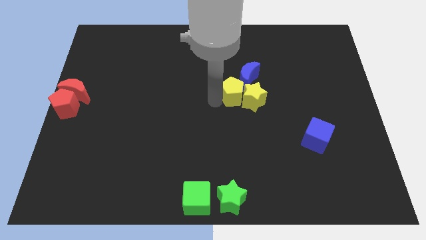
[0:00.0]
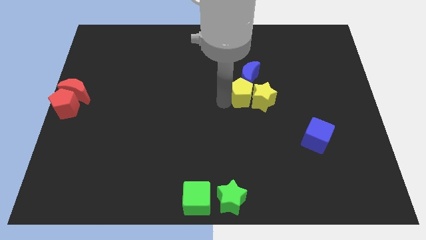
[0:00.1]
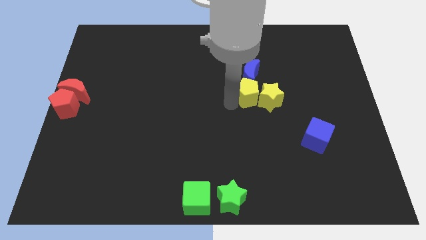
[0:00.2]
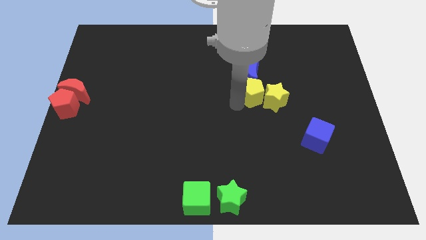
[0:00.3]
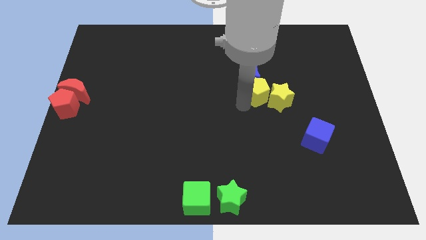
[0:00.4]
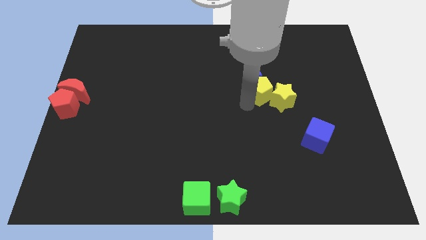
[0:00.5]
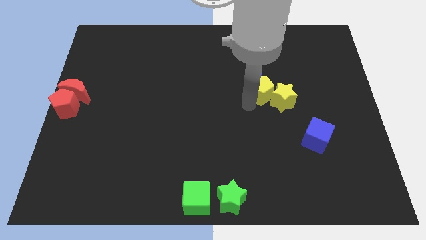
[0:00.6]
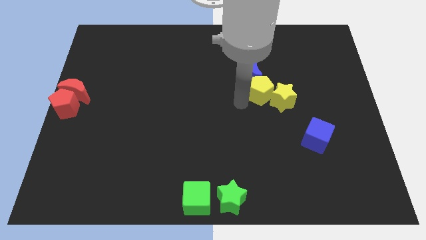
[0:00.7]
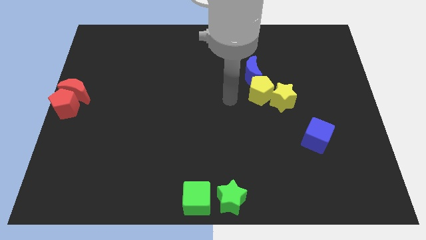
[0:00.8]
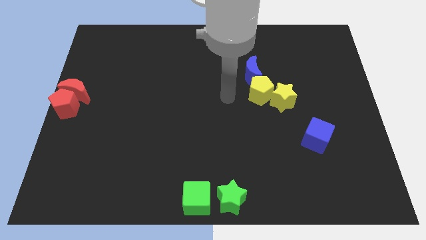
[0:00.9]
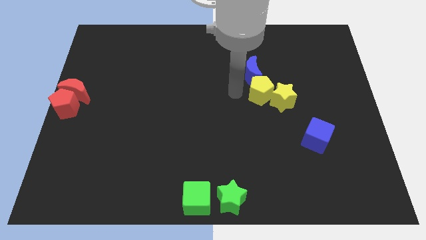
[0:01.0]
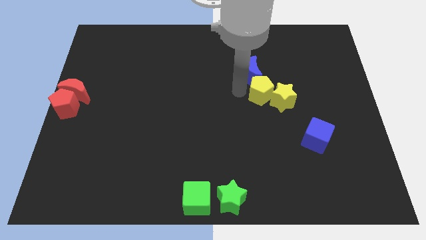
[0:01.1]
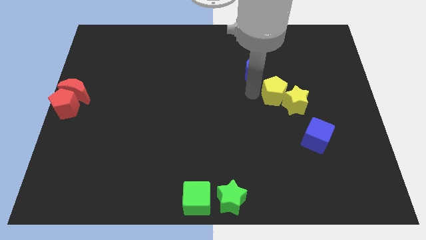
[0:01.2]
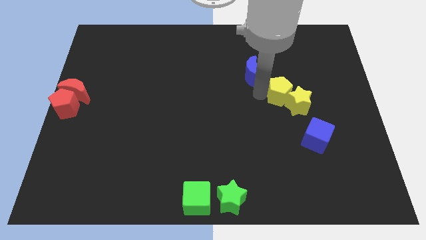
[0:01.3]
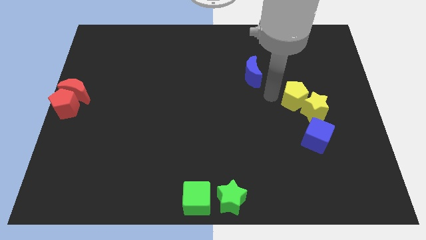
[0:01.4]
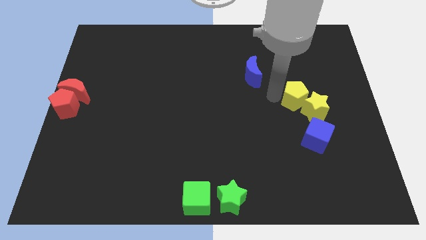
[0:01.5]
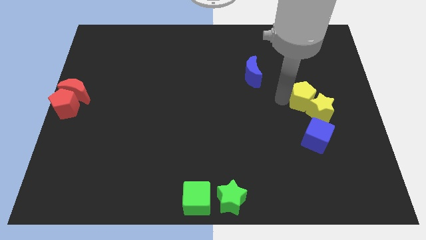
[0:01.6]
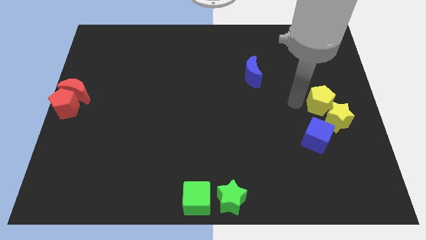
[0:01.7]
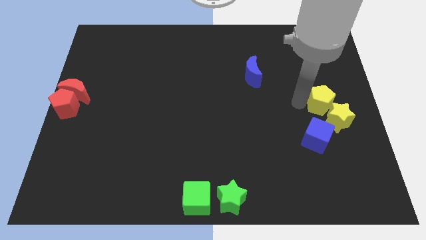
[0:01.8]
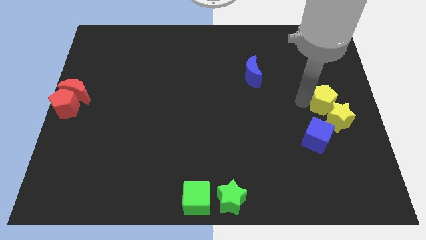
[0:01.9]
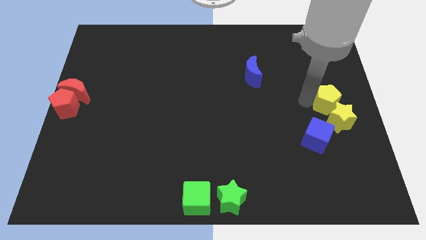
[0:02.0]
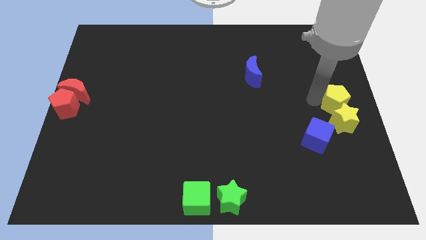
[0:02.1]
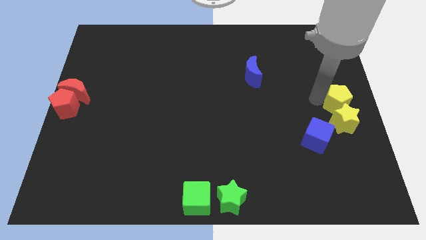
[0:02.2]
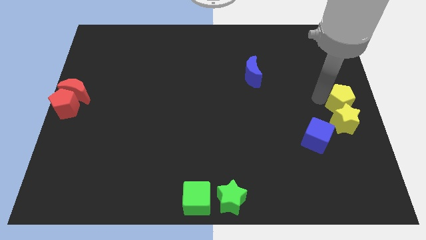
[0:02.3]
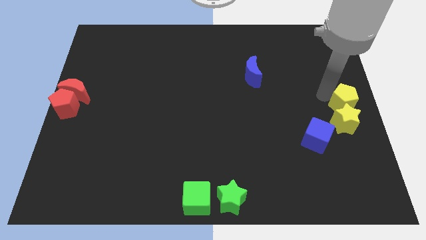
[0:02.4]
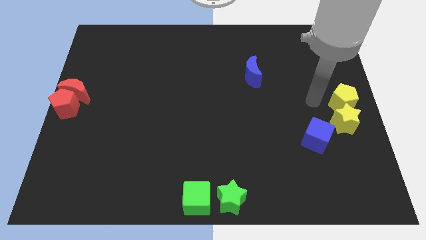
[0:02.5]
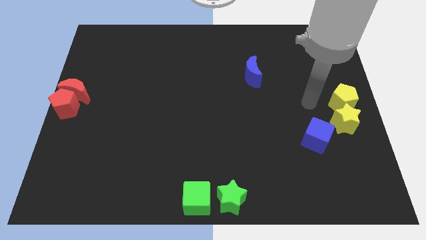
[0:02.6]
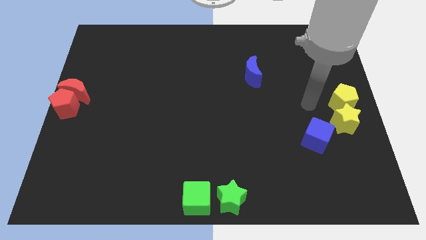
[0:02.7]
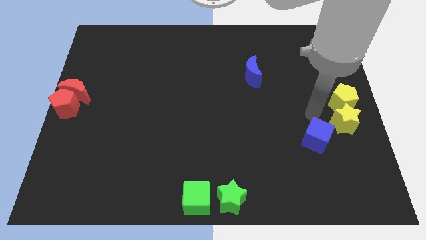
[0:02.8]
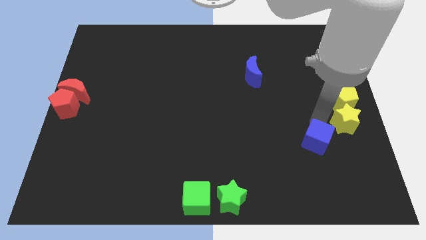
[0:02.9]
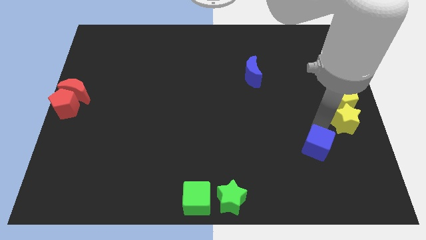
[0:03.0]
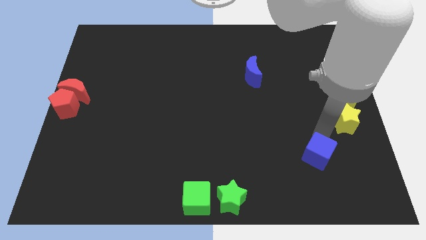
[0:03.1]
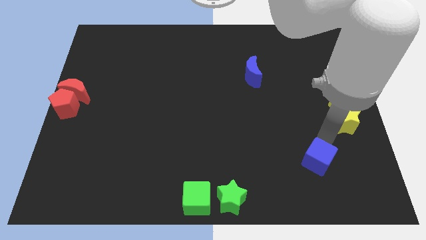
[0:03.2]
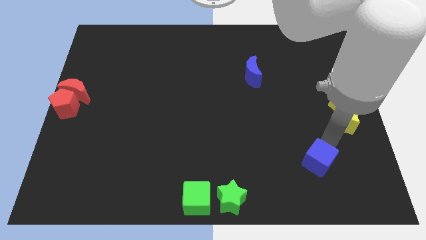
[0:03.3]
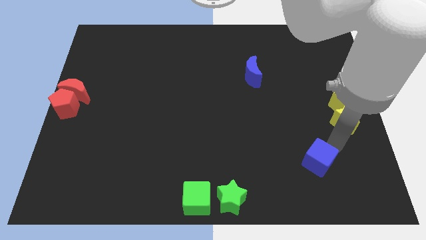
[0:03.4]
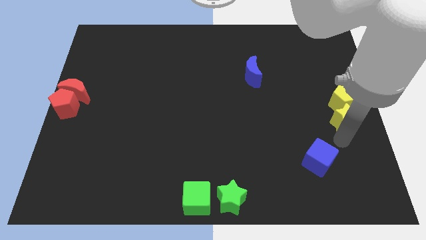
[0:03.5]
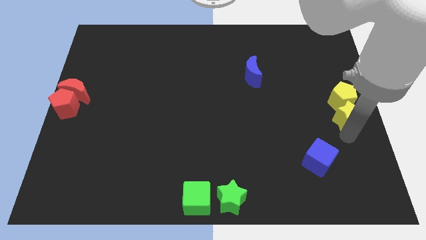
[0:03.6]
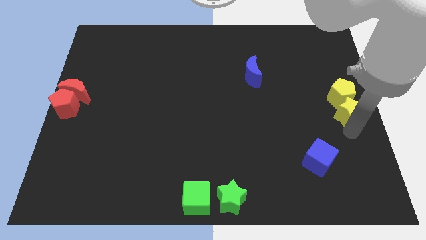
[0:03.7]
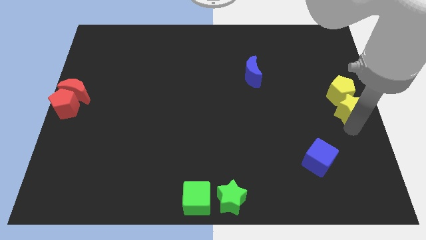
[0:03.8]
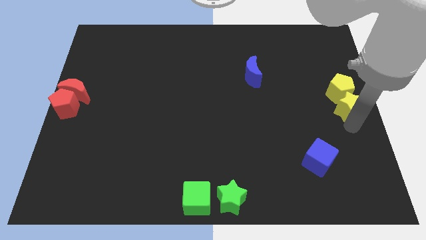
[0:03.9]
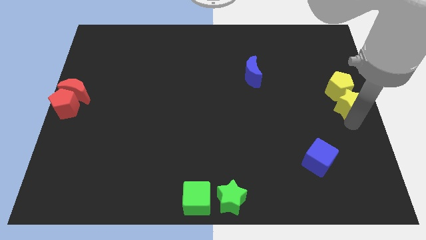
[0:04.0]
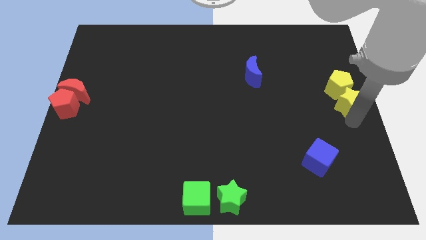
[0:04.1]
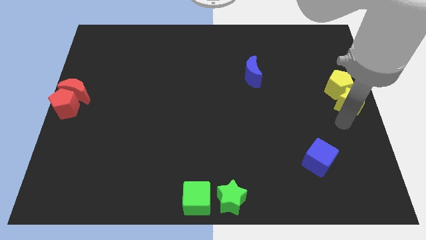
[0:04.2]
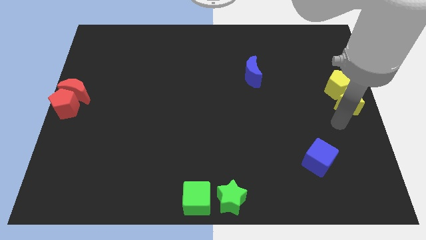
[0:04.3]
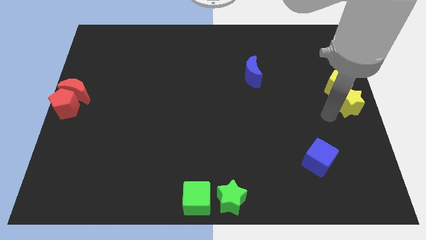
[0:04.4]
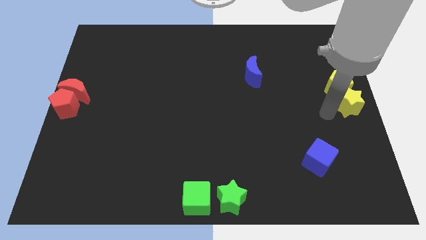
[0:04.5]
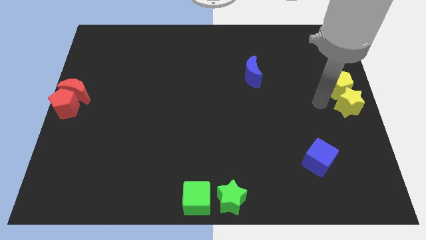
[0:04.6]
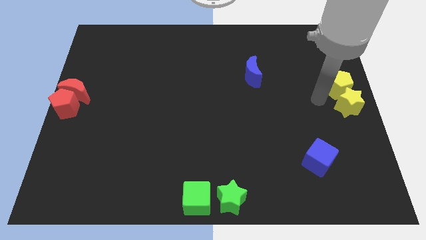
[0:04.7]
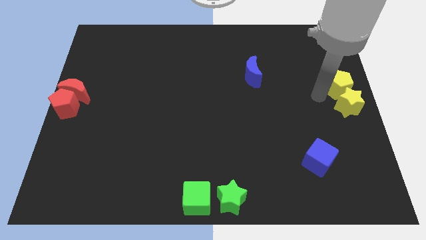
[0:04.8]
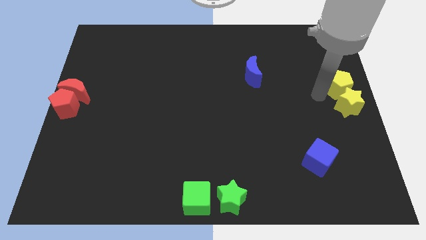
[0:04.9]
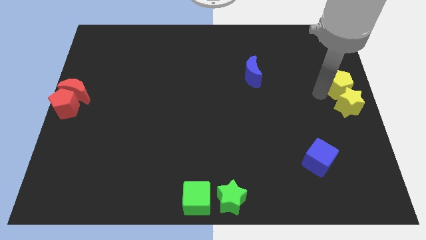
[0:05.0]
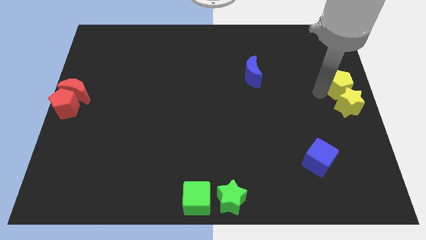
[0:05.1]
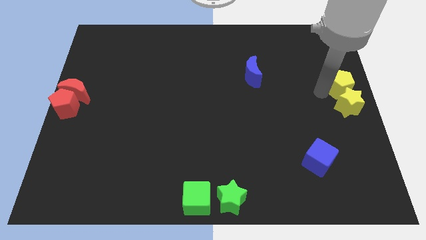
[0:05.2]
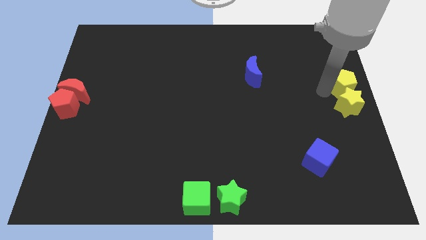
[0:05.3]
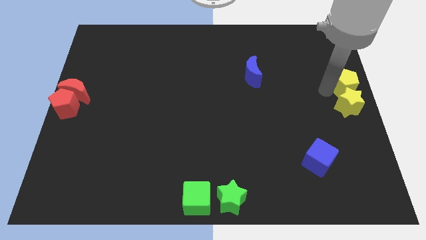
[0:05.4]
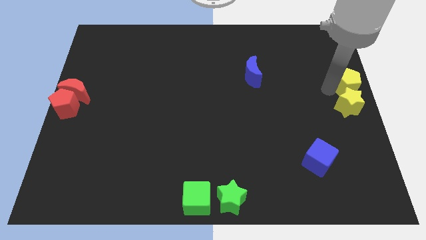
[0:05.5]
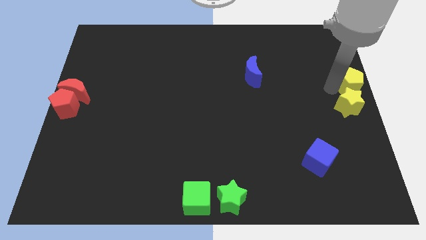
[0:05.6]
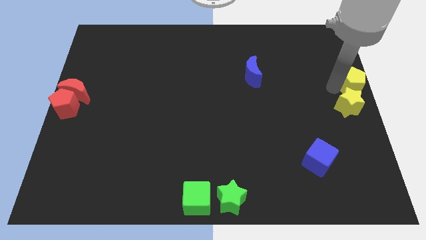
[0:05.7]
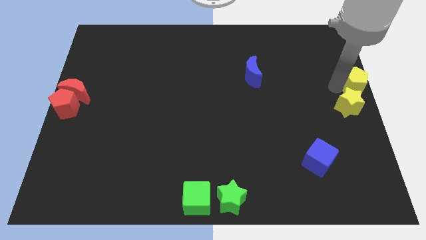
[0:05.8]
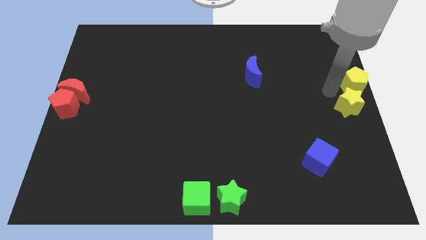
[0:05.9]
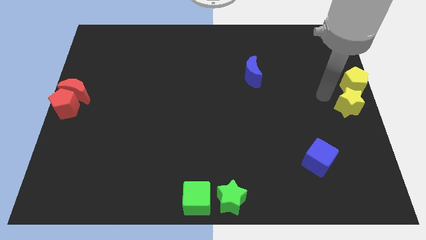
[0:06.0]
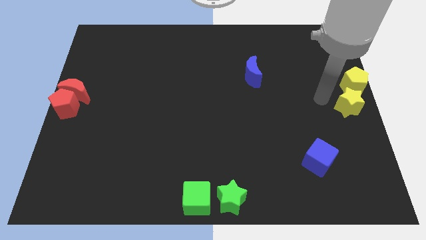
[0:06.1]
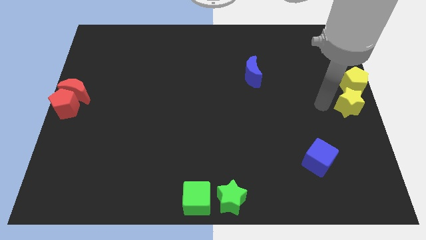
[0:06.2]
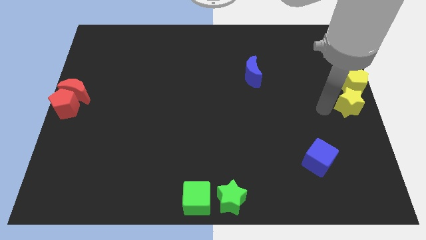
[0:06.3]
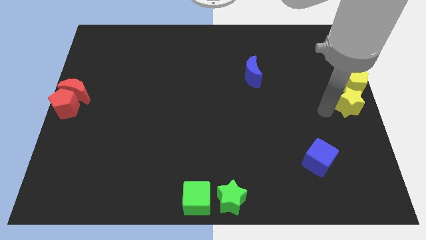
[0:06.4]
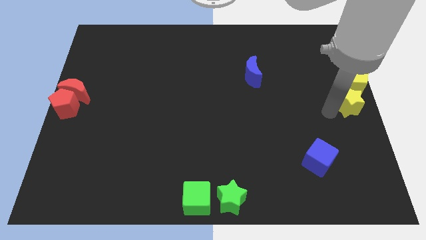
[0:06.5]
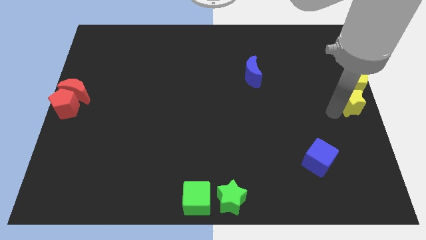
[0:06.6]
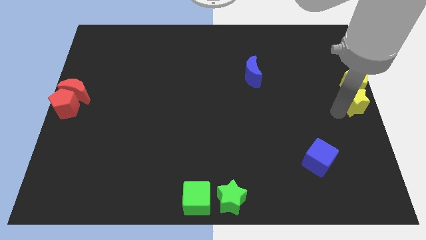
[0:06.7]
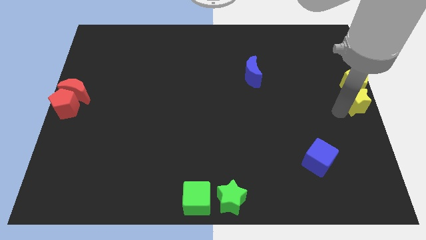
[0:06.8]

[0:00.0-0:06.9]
place yellow blocks to the right center

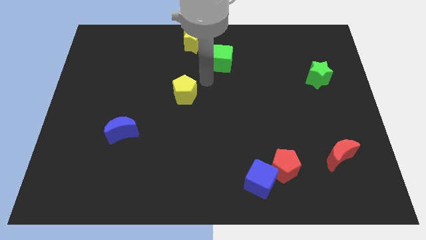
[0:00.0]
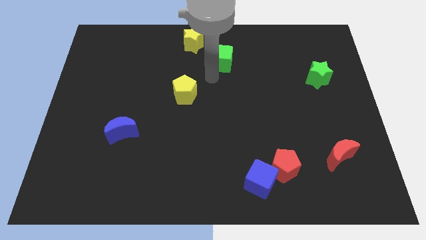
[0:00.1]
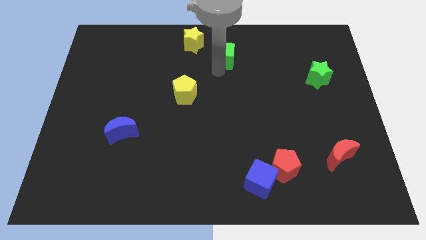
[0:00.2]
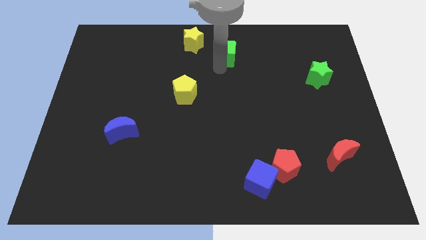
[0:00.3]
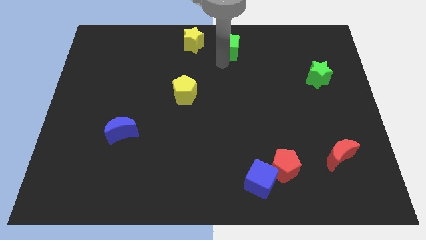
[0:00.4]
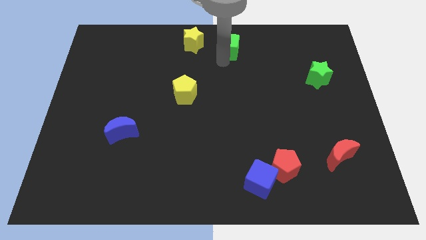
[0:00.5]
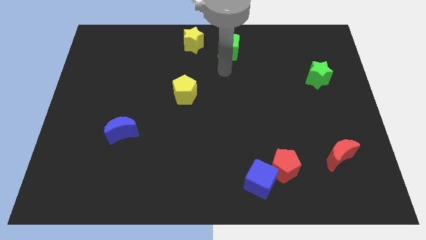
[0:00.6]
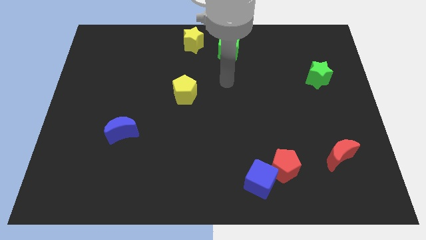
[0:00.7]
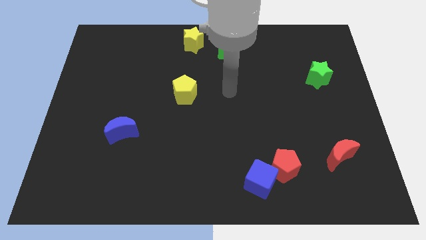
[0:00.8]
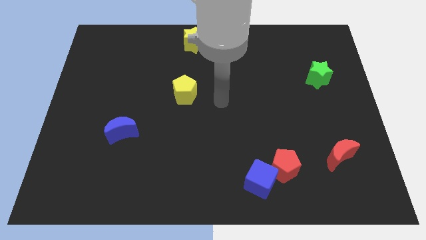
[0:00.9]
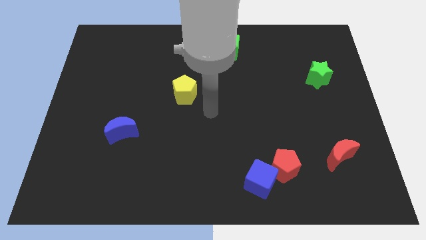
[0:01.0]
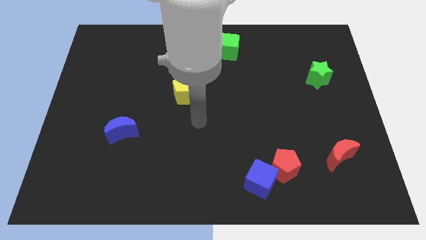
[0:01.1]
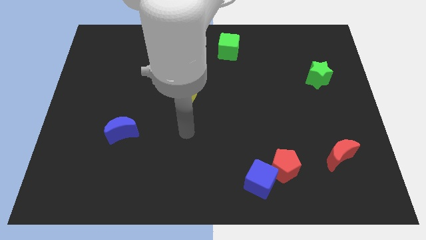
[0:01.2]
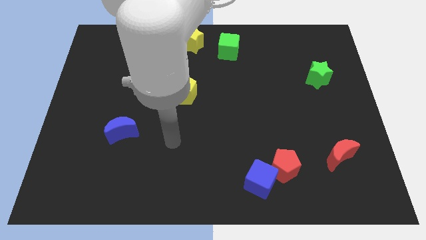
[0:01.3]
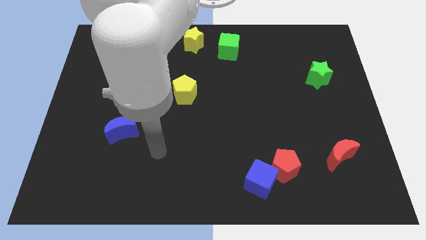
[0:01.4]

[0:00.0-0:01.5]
put the green cube parallel right to the yellow star

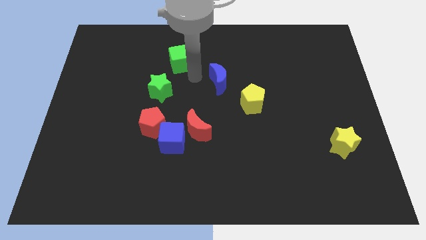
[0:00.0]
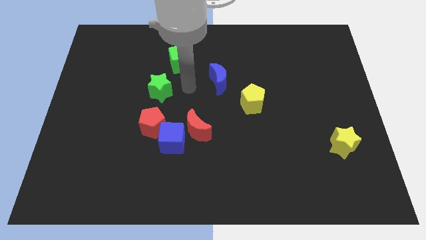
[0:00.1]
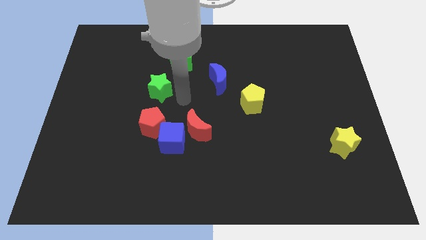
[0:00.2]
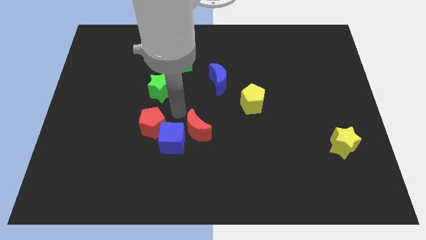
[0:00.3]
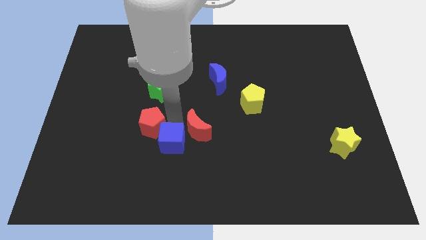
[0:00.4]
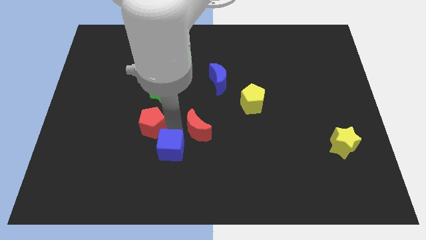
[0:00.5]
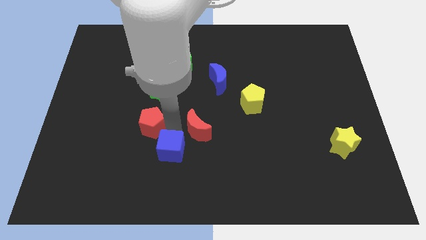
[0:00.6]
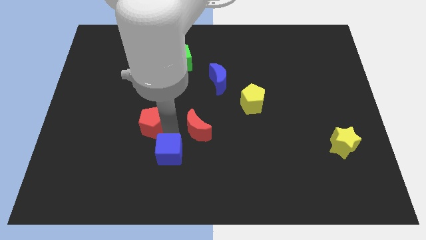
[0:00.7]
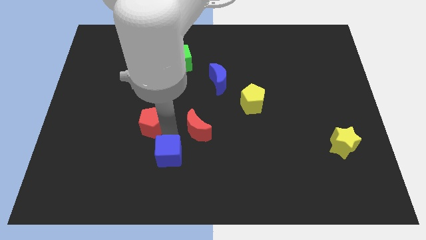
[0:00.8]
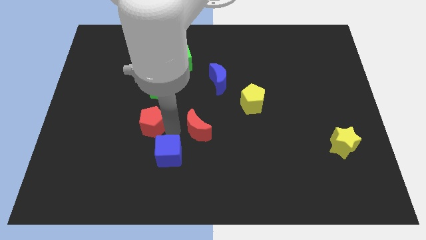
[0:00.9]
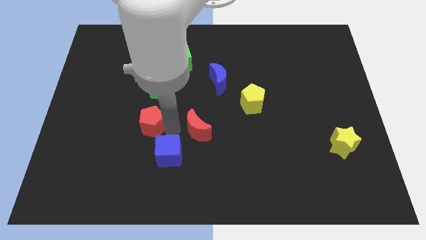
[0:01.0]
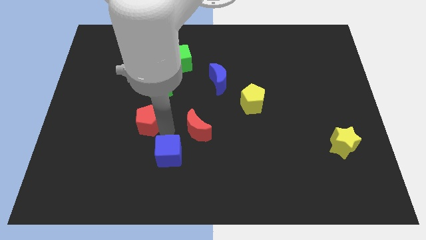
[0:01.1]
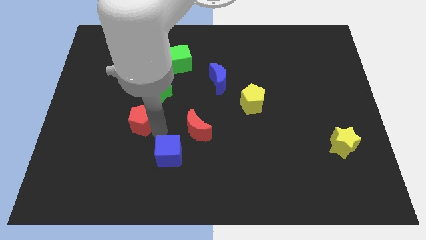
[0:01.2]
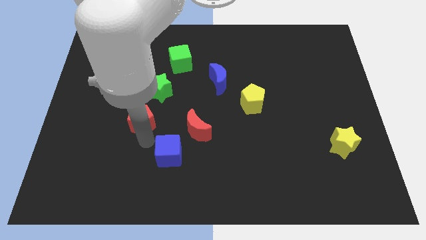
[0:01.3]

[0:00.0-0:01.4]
separate the red crescent from the blue cube
